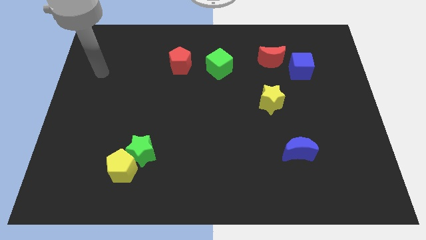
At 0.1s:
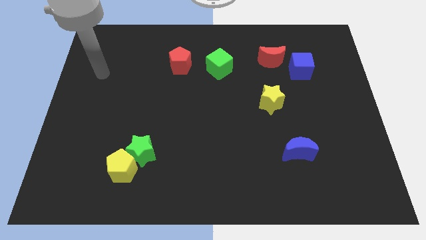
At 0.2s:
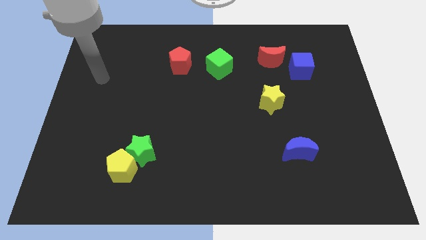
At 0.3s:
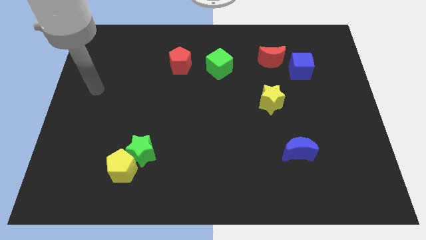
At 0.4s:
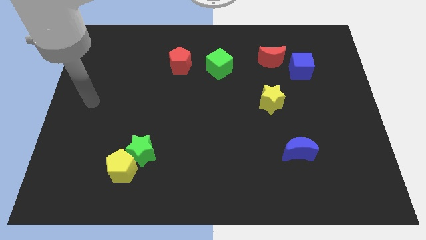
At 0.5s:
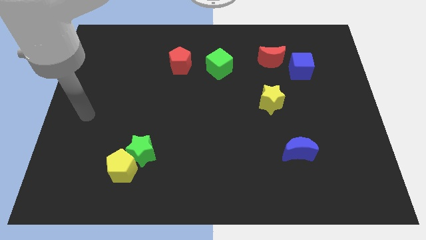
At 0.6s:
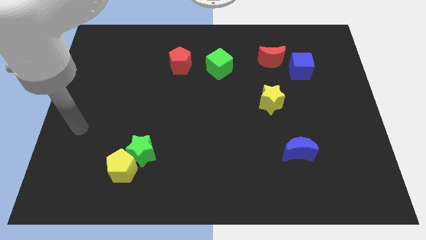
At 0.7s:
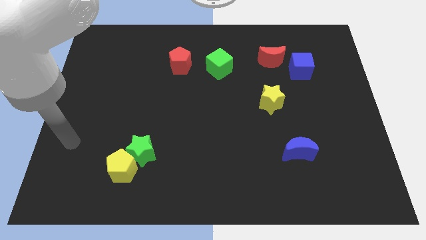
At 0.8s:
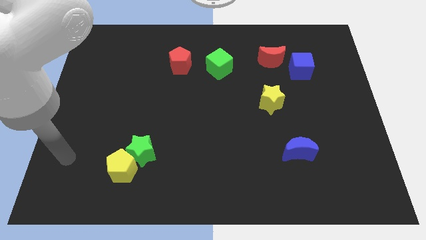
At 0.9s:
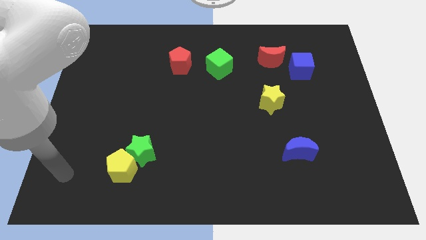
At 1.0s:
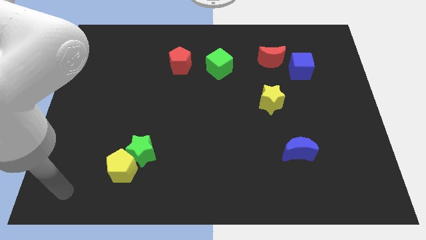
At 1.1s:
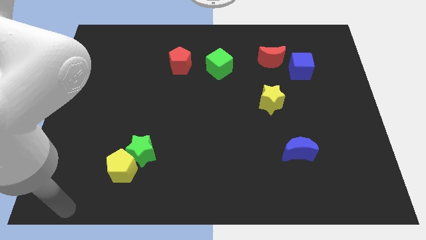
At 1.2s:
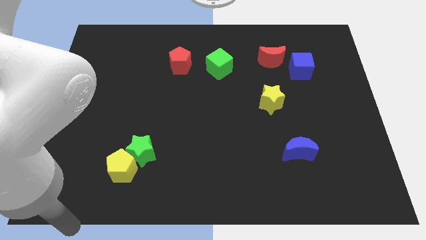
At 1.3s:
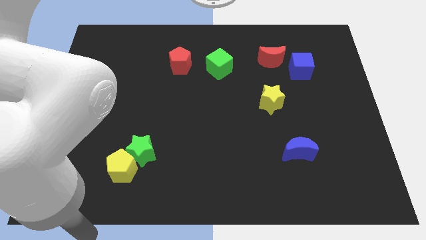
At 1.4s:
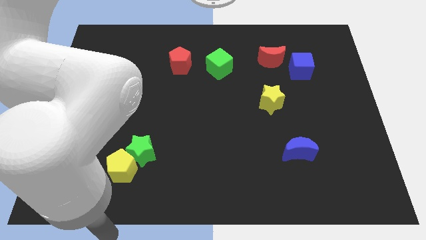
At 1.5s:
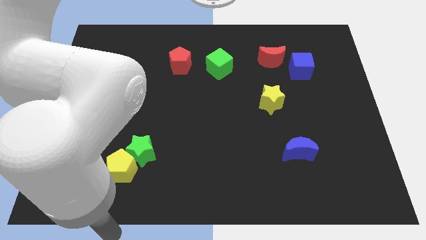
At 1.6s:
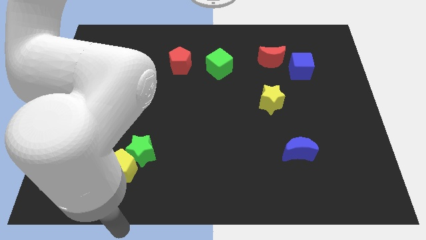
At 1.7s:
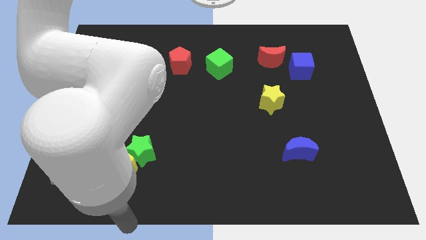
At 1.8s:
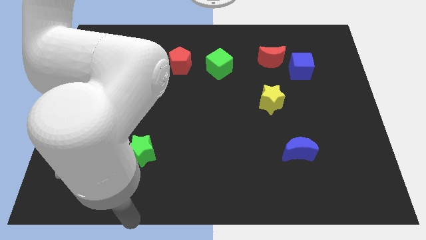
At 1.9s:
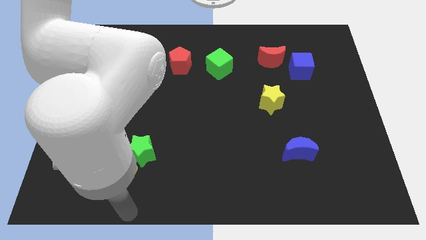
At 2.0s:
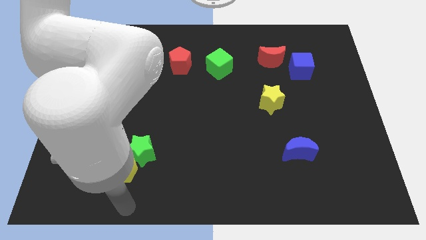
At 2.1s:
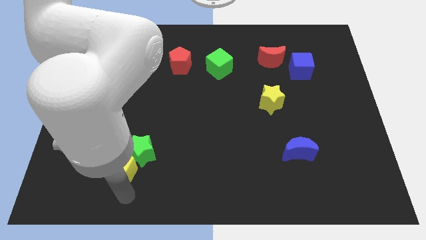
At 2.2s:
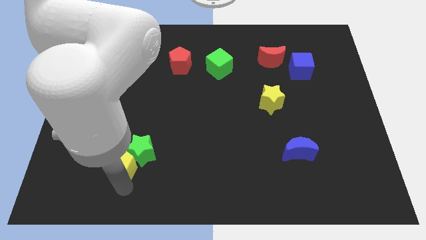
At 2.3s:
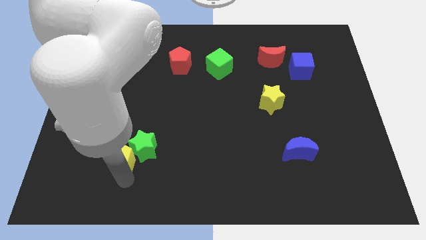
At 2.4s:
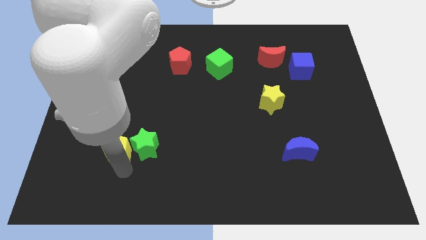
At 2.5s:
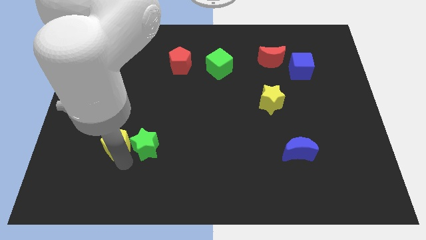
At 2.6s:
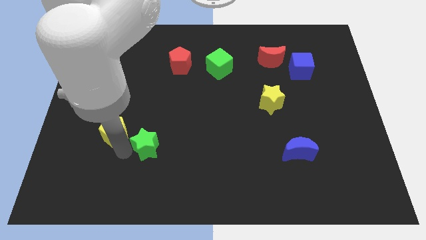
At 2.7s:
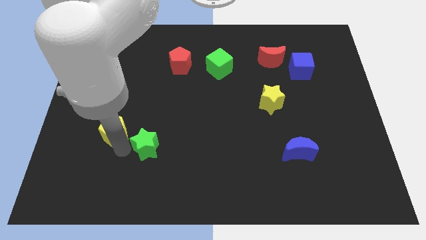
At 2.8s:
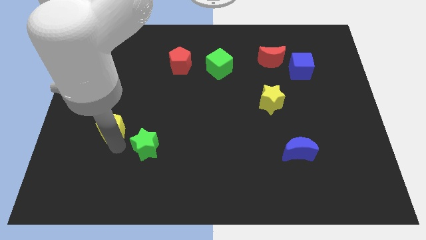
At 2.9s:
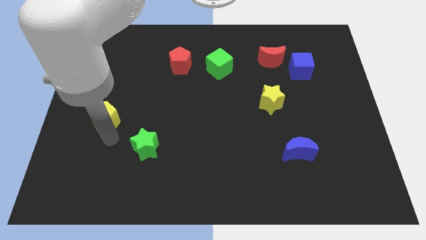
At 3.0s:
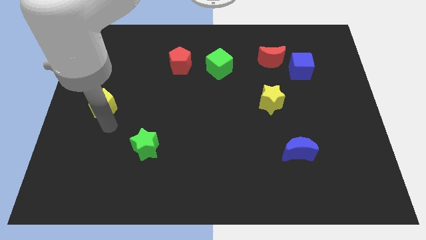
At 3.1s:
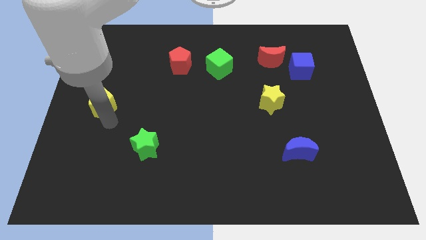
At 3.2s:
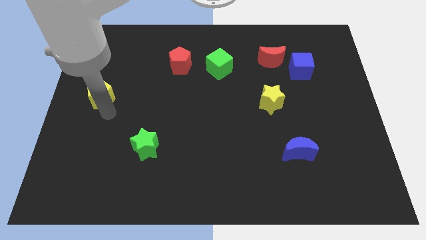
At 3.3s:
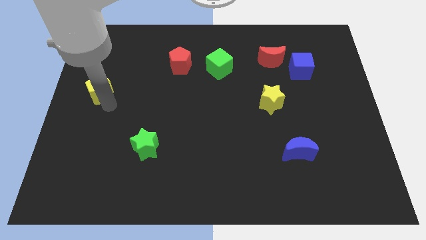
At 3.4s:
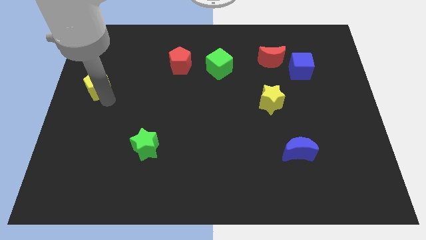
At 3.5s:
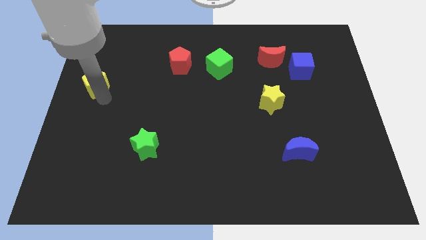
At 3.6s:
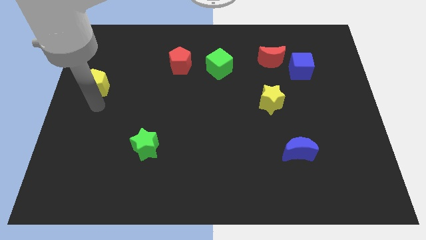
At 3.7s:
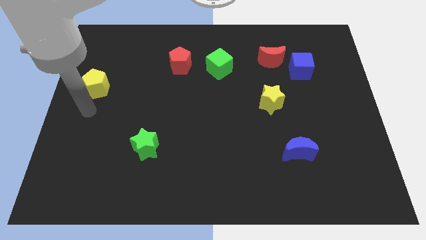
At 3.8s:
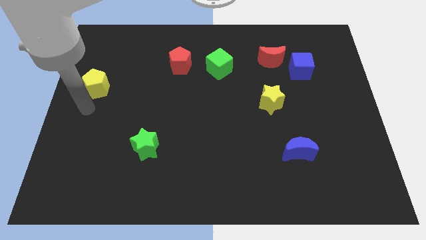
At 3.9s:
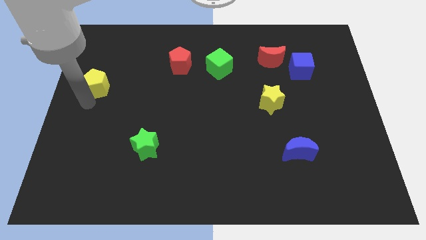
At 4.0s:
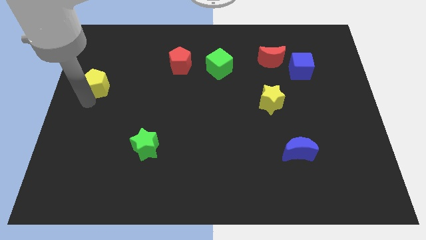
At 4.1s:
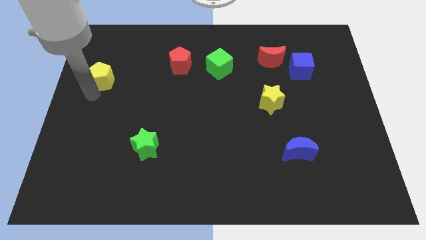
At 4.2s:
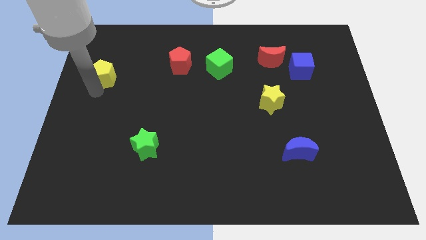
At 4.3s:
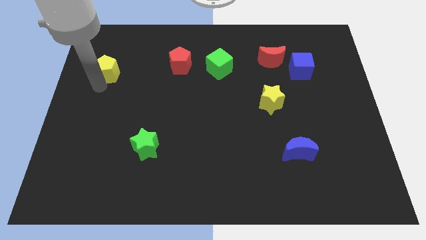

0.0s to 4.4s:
separate the yellow pentagon and the green star

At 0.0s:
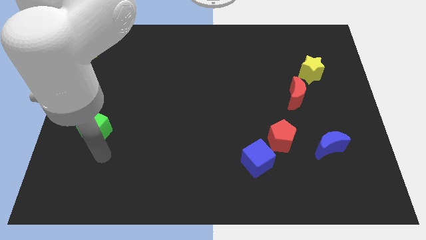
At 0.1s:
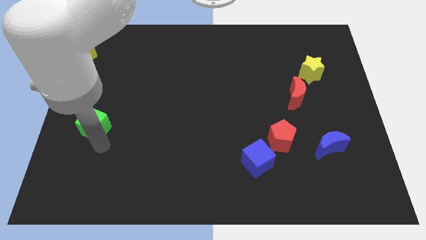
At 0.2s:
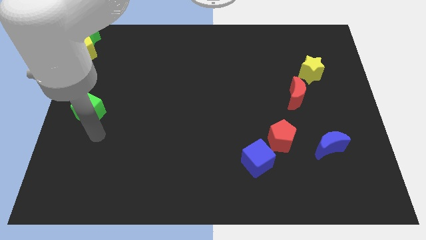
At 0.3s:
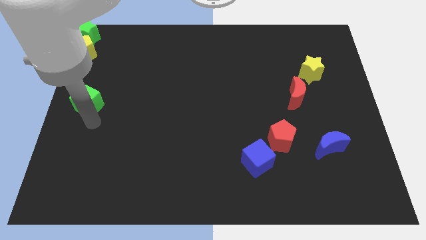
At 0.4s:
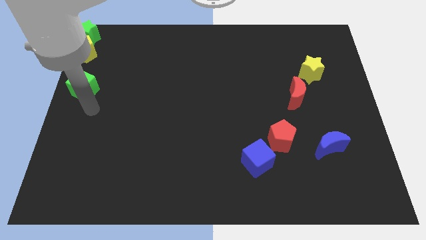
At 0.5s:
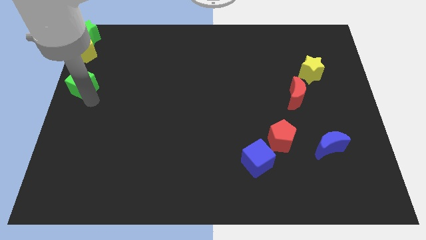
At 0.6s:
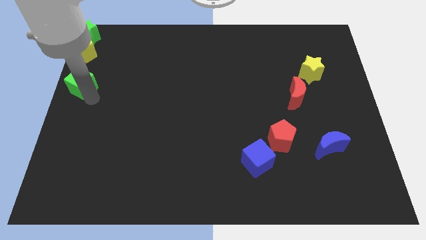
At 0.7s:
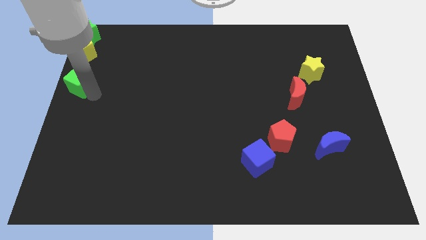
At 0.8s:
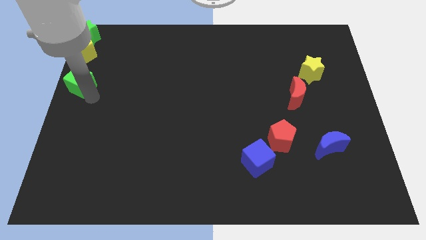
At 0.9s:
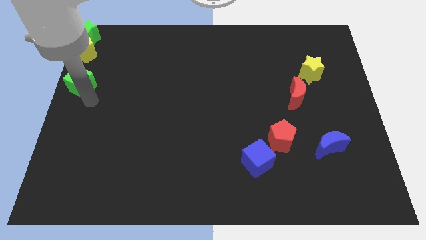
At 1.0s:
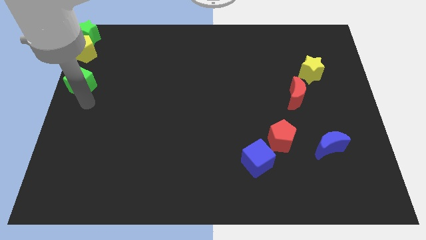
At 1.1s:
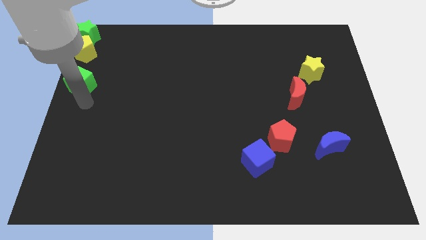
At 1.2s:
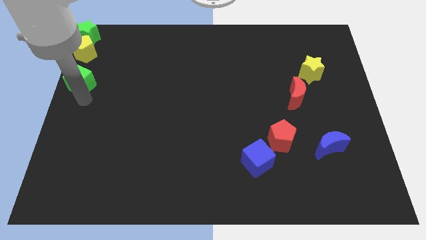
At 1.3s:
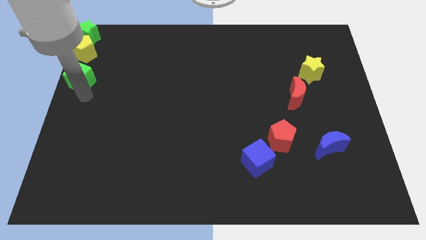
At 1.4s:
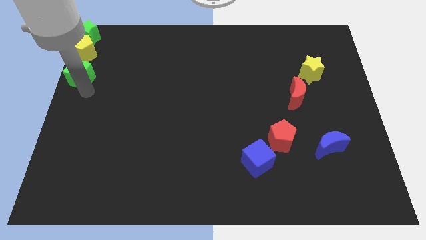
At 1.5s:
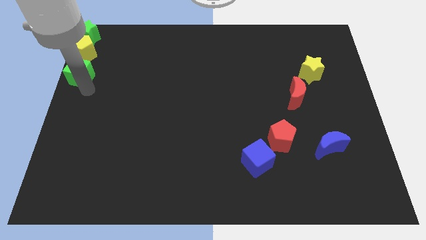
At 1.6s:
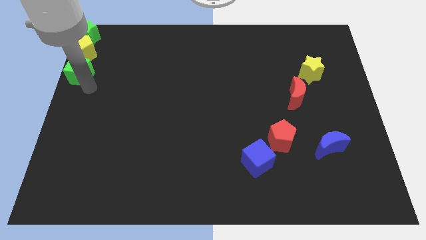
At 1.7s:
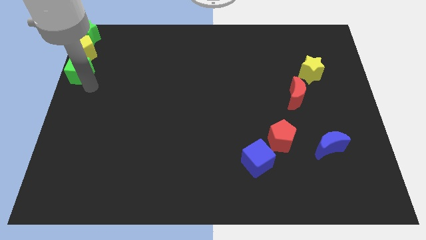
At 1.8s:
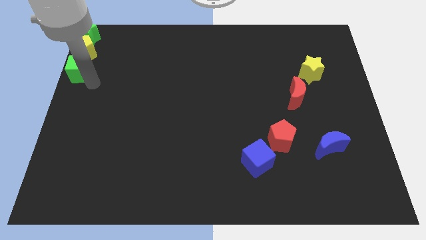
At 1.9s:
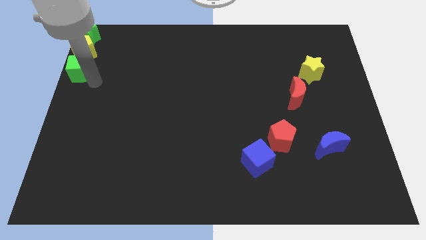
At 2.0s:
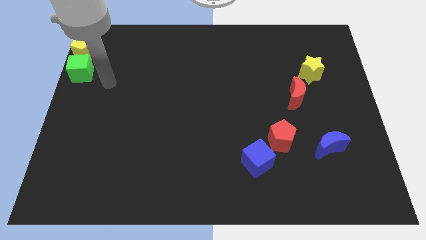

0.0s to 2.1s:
slide the green cube to the bottom of the yellow pentagon

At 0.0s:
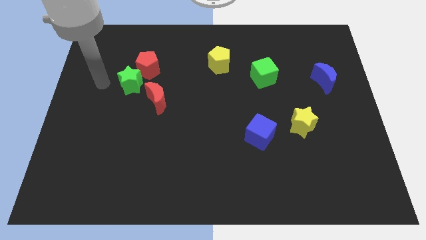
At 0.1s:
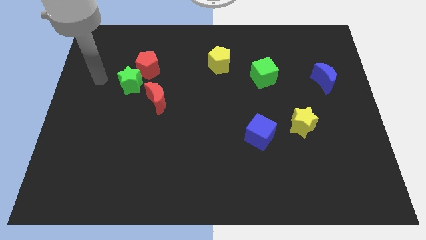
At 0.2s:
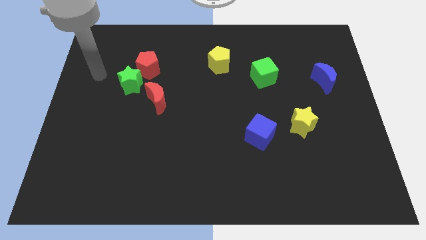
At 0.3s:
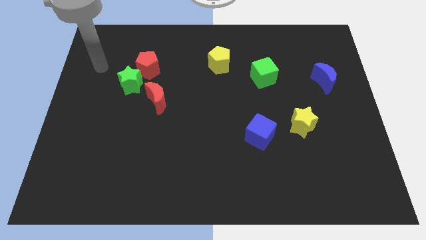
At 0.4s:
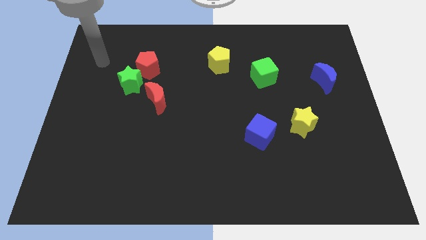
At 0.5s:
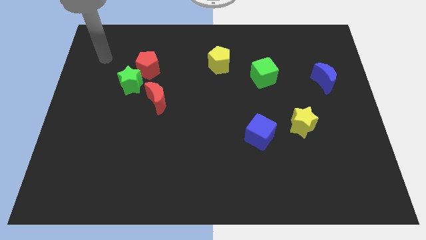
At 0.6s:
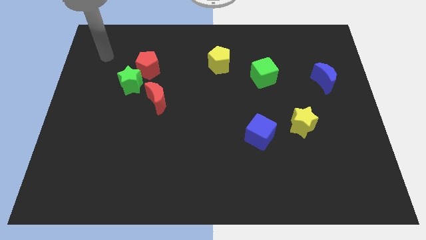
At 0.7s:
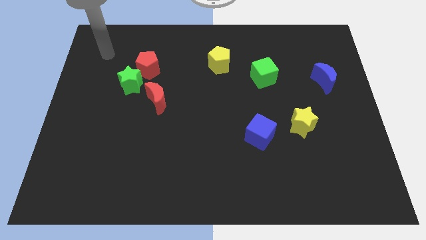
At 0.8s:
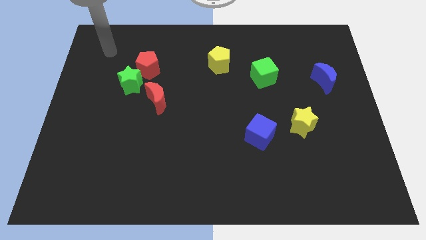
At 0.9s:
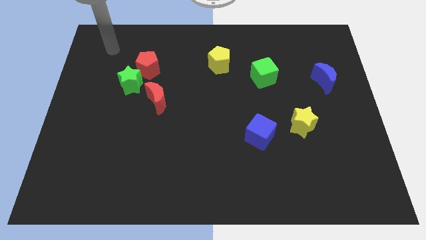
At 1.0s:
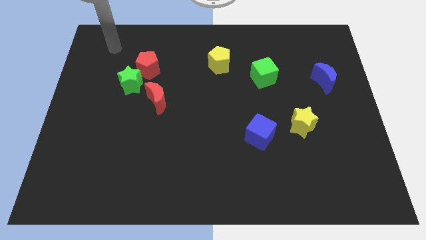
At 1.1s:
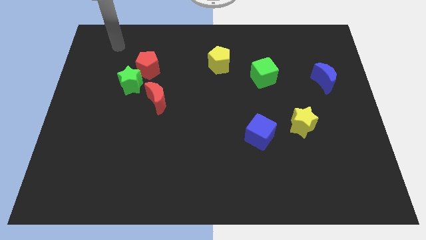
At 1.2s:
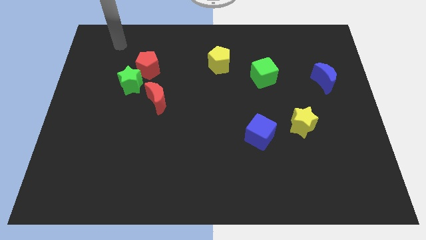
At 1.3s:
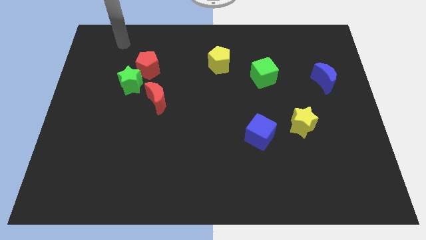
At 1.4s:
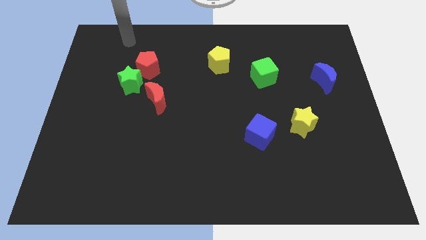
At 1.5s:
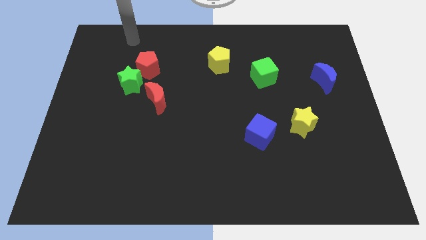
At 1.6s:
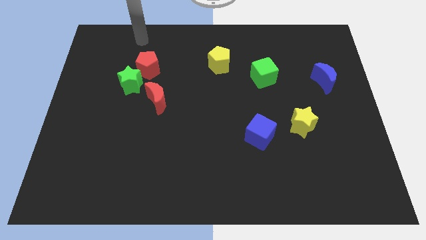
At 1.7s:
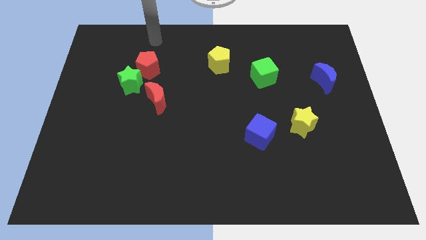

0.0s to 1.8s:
move arm to the top of red pentagon

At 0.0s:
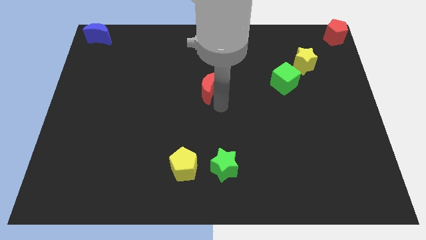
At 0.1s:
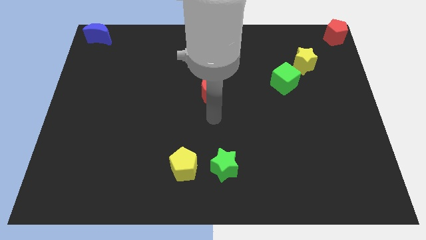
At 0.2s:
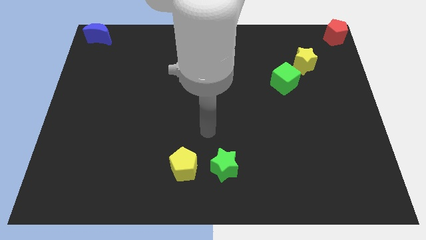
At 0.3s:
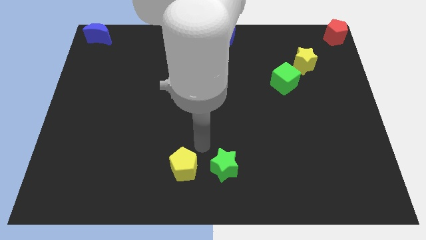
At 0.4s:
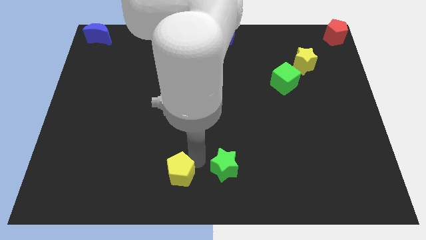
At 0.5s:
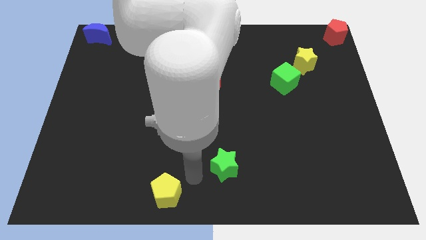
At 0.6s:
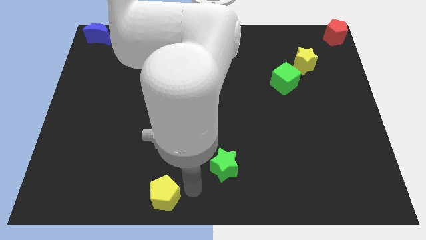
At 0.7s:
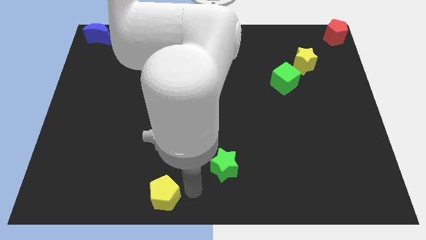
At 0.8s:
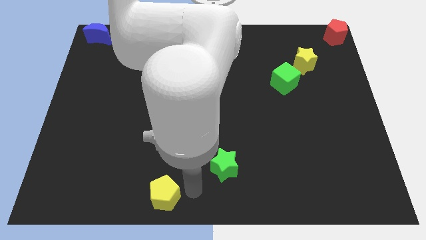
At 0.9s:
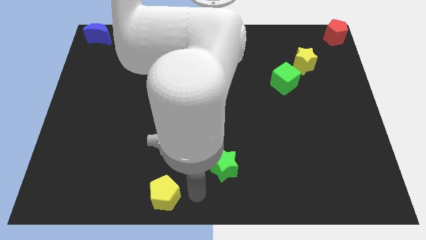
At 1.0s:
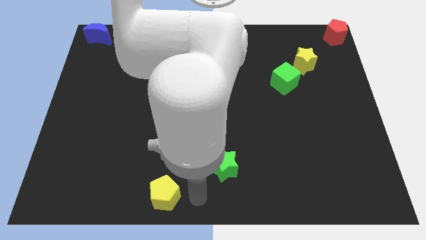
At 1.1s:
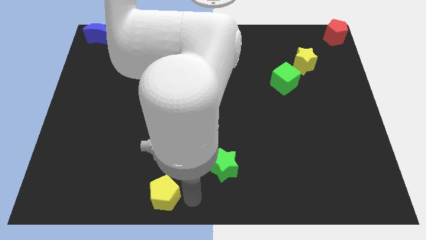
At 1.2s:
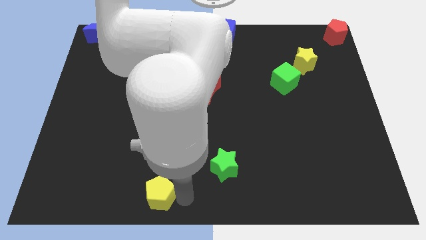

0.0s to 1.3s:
push the yellow pentagon towards the bottom
